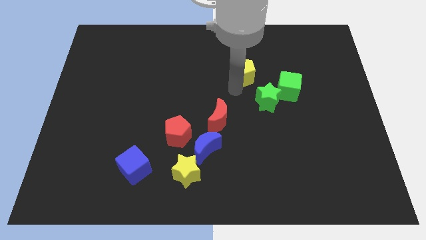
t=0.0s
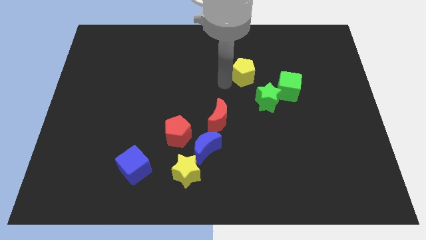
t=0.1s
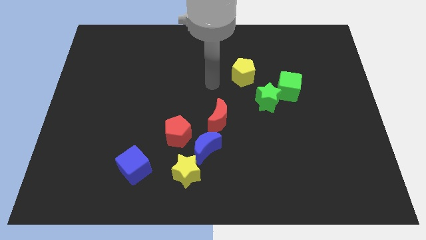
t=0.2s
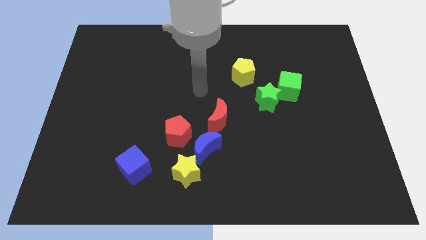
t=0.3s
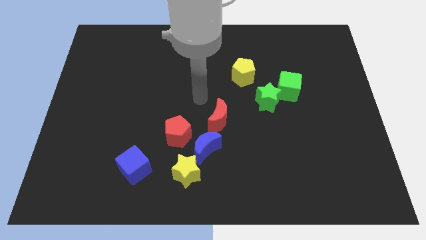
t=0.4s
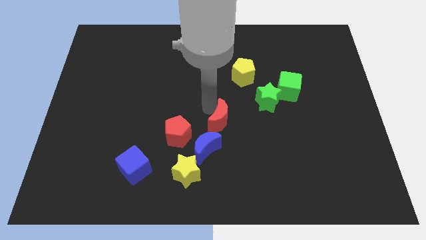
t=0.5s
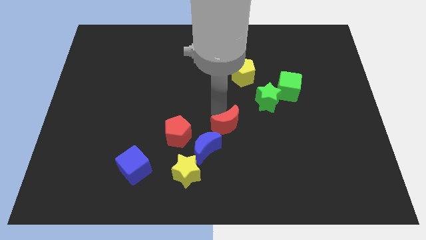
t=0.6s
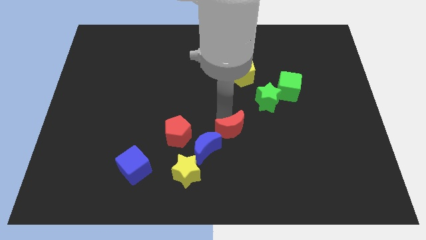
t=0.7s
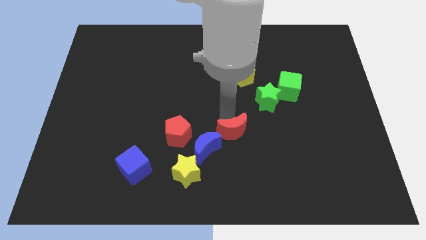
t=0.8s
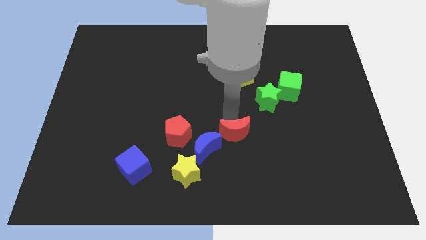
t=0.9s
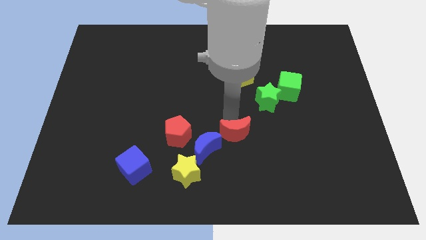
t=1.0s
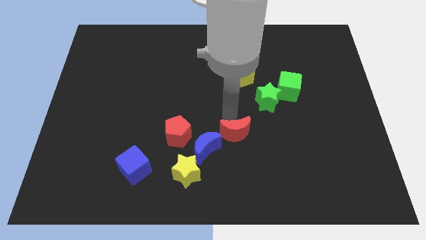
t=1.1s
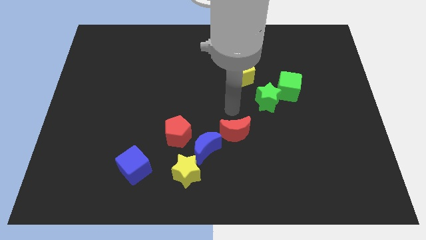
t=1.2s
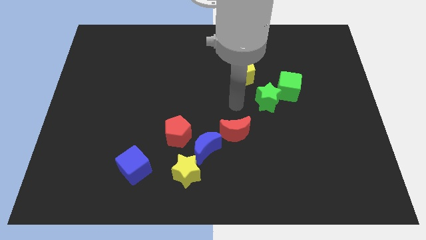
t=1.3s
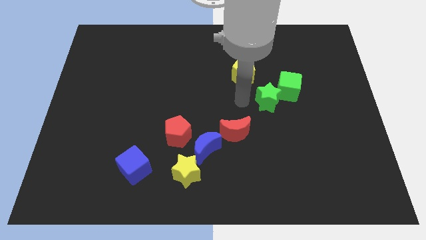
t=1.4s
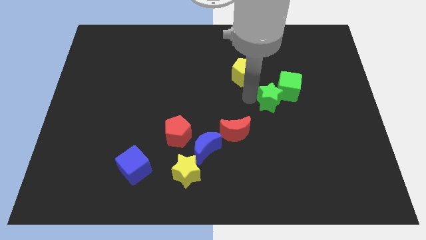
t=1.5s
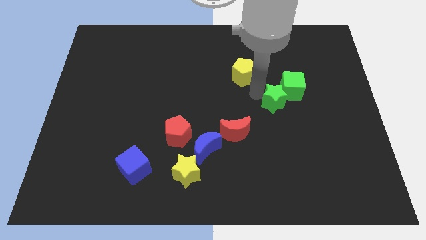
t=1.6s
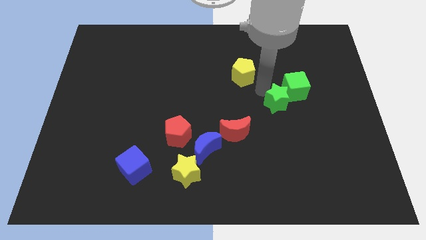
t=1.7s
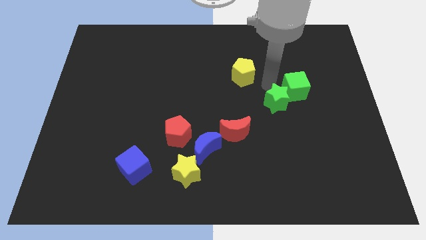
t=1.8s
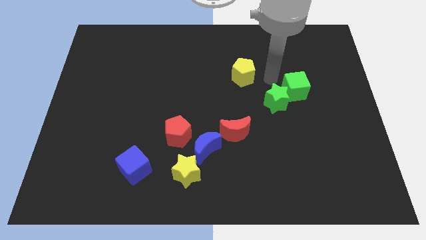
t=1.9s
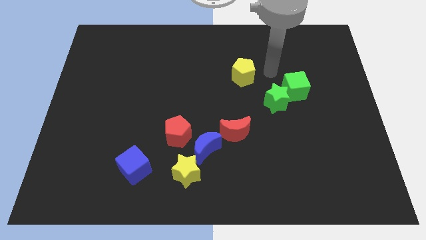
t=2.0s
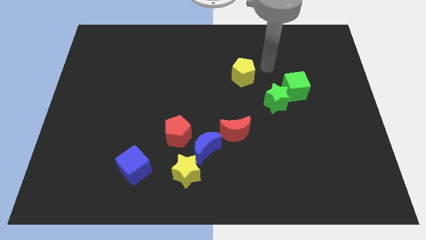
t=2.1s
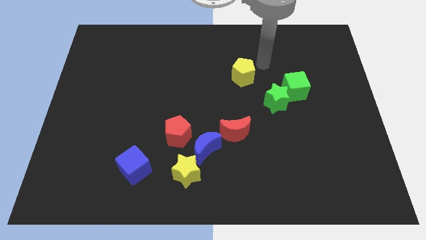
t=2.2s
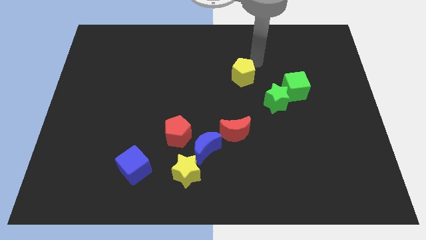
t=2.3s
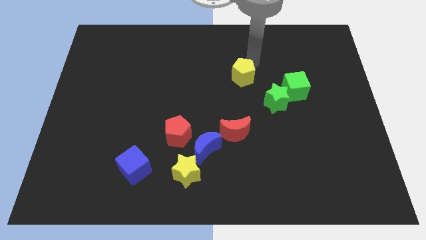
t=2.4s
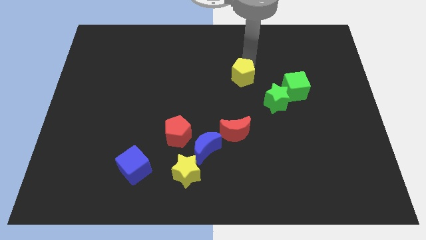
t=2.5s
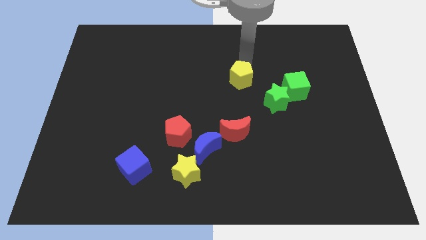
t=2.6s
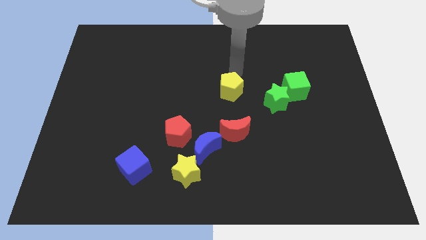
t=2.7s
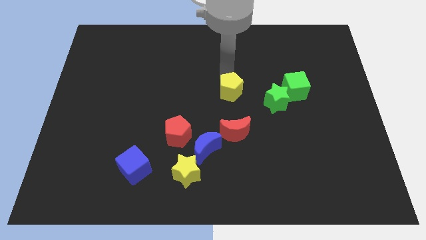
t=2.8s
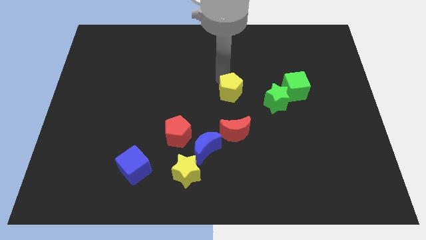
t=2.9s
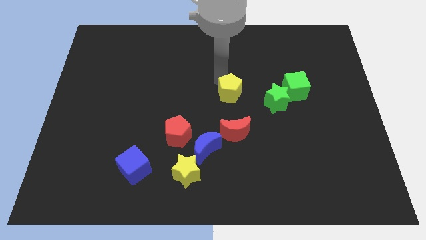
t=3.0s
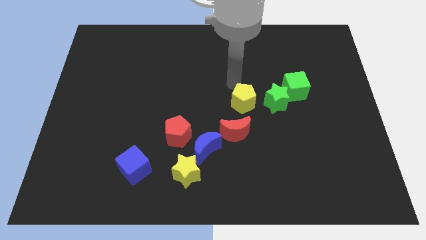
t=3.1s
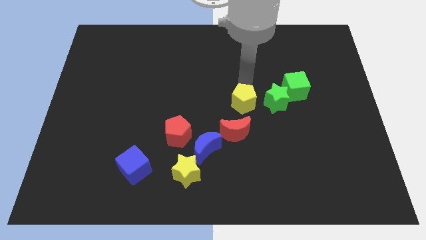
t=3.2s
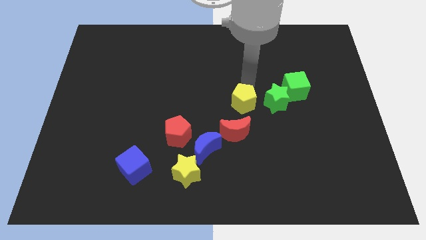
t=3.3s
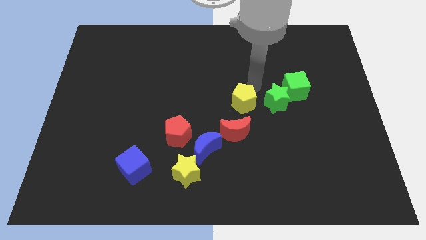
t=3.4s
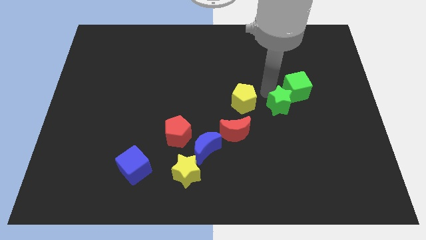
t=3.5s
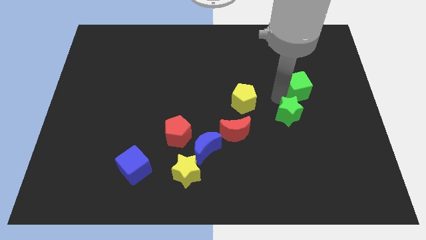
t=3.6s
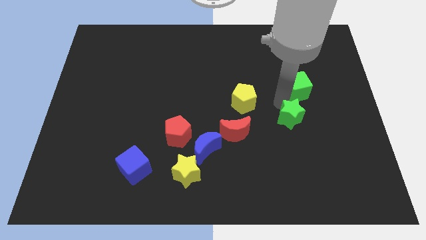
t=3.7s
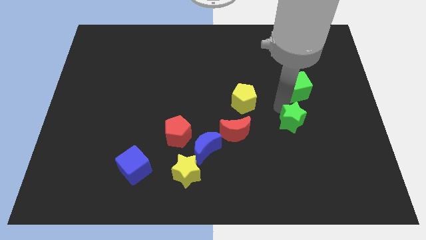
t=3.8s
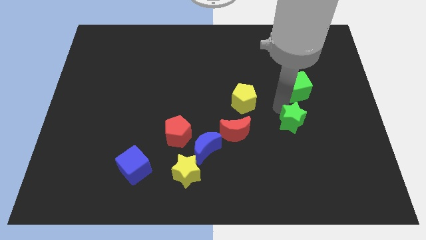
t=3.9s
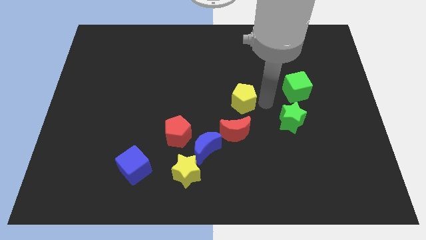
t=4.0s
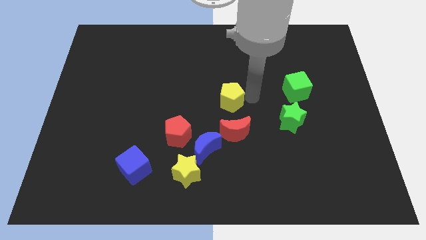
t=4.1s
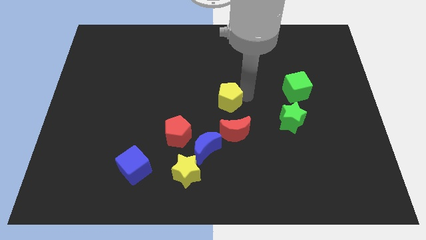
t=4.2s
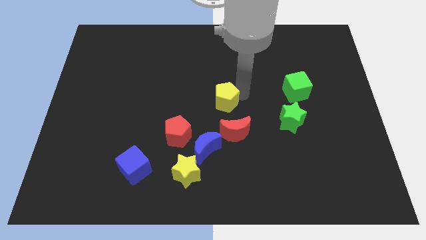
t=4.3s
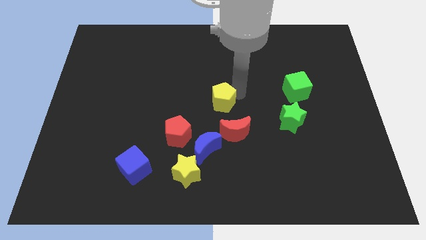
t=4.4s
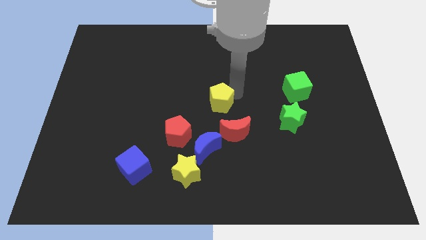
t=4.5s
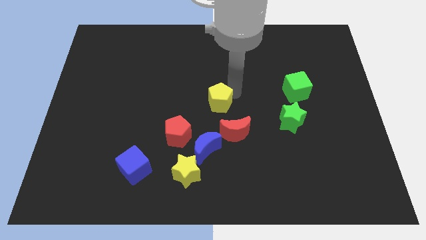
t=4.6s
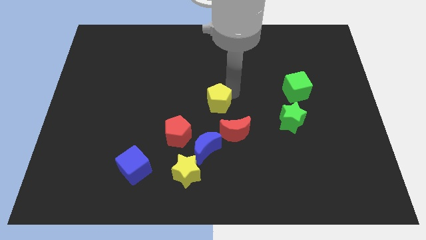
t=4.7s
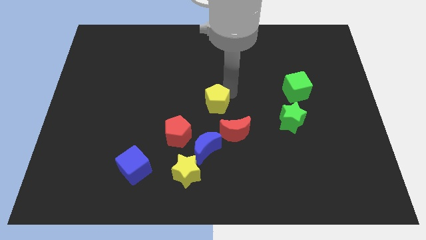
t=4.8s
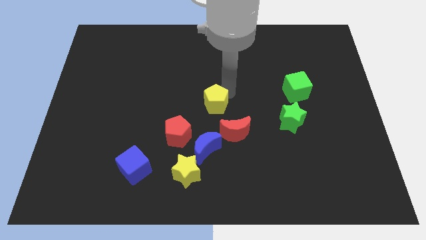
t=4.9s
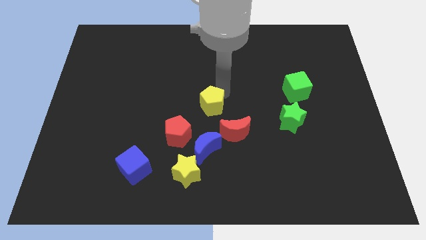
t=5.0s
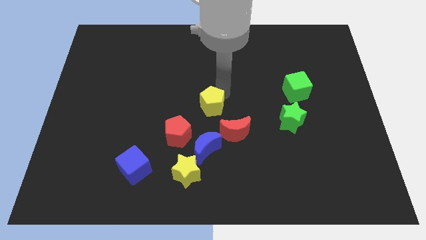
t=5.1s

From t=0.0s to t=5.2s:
push the green blocks red moon and yellow pentagon towards the bottom side of the board

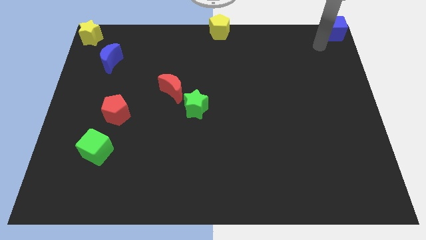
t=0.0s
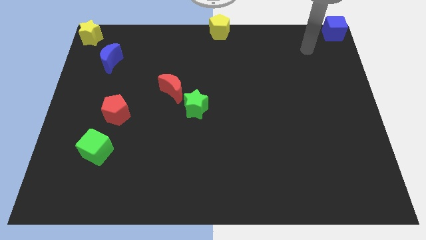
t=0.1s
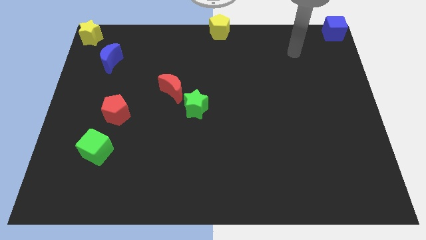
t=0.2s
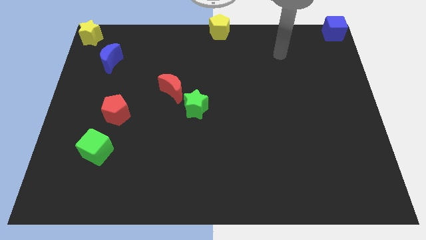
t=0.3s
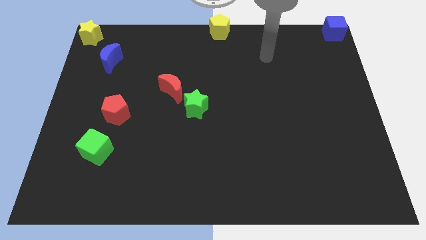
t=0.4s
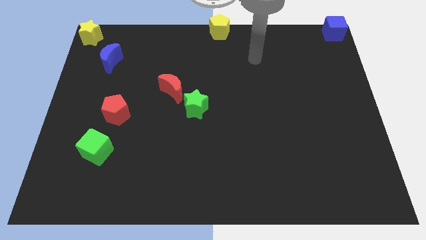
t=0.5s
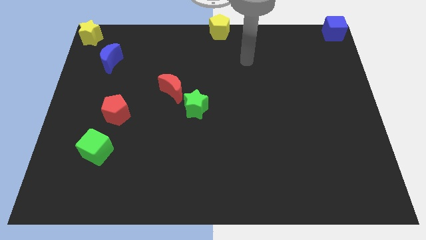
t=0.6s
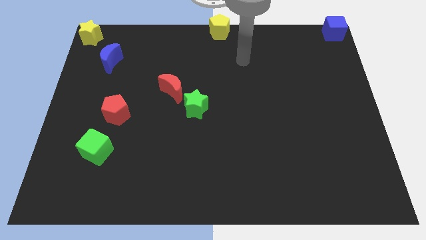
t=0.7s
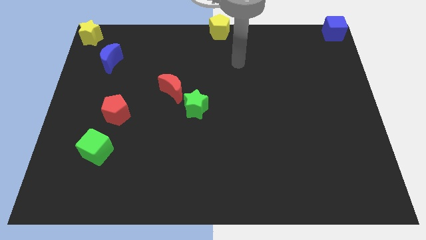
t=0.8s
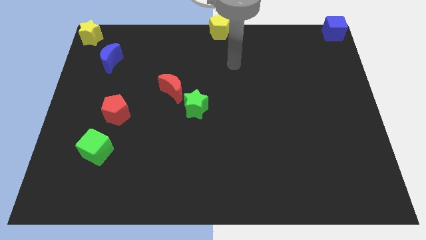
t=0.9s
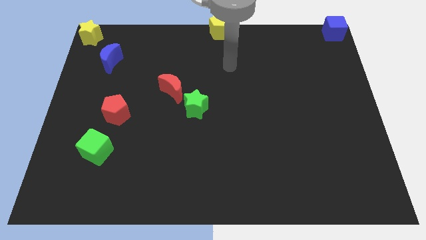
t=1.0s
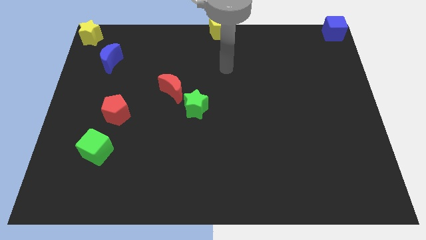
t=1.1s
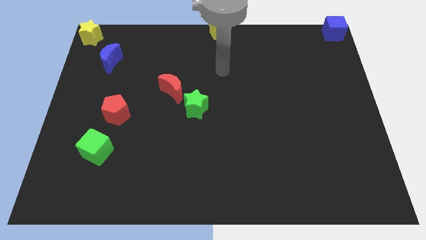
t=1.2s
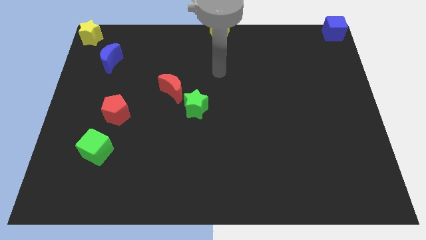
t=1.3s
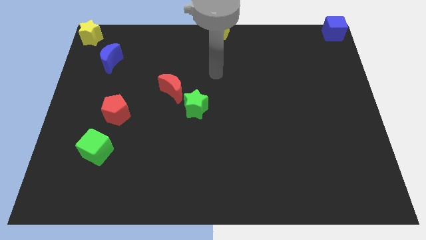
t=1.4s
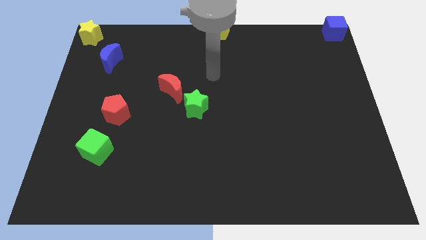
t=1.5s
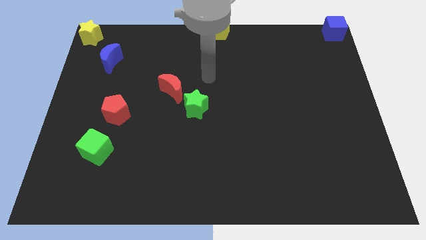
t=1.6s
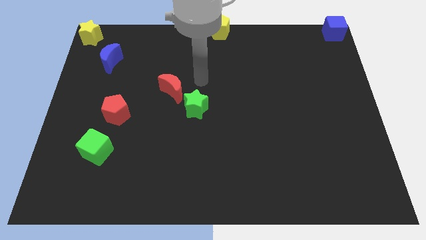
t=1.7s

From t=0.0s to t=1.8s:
go away from the blue cube

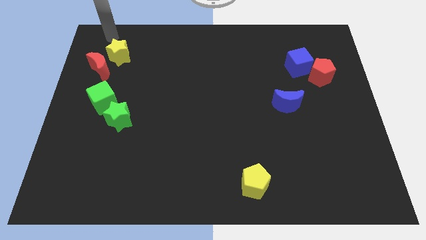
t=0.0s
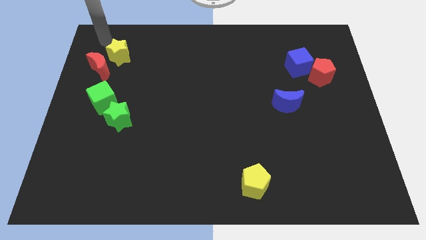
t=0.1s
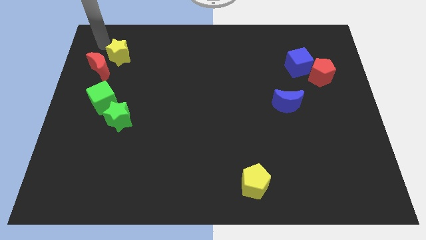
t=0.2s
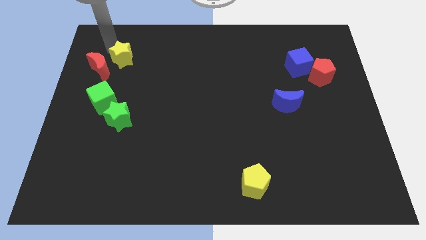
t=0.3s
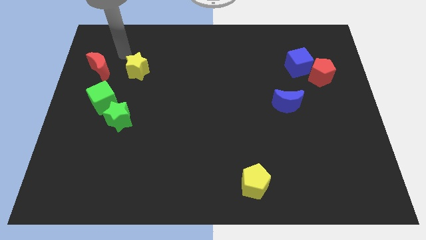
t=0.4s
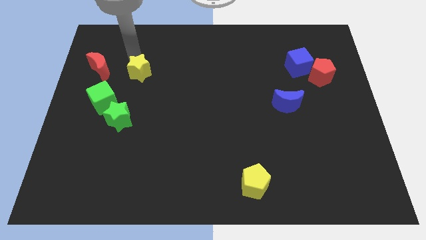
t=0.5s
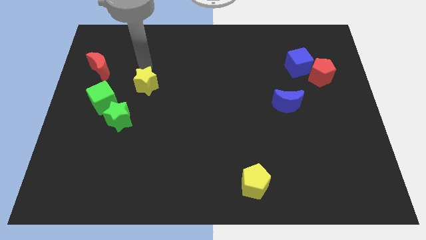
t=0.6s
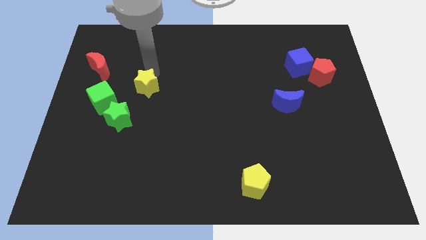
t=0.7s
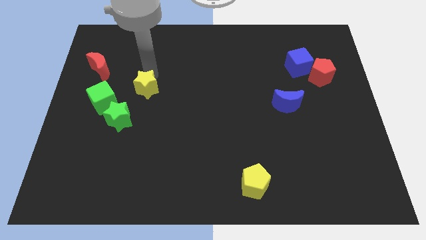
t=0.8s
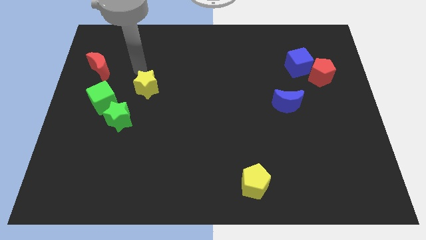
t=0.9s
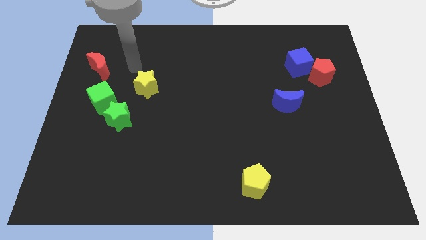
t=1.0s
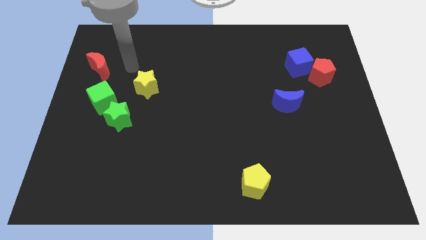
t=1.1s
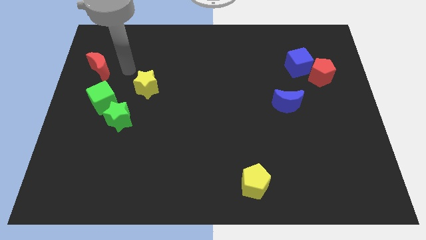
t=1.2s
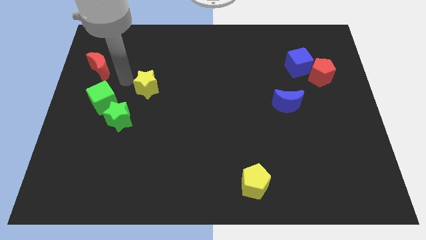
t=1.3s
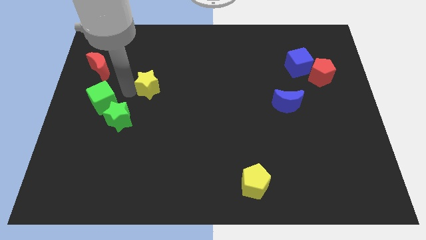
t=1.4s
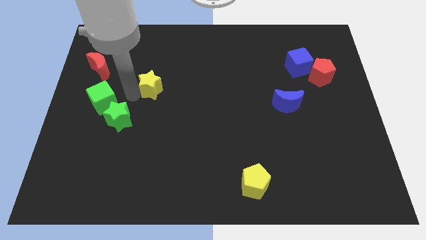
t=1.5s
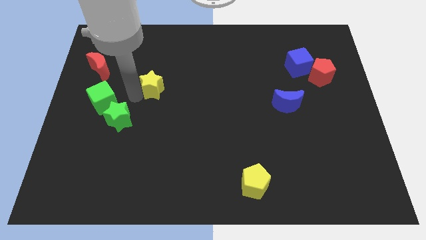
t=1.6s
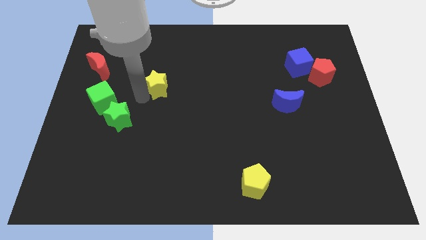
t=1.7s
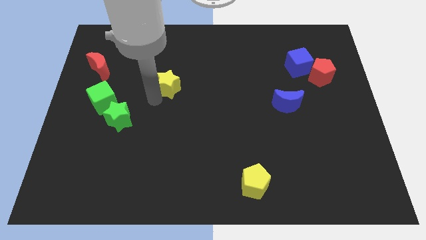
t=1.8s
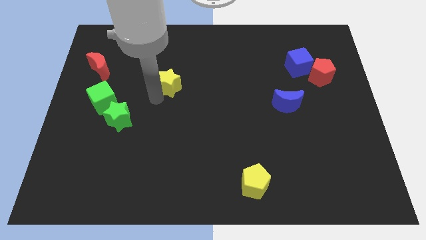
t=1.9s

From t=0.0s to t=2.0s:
move yellow star towards center of the board
